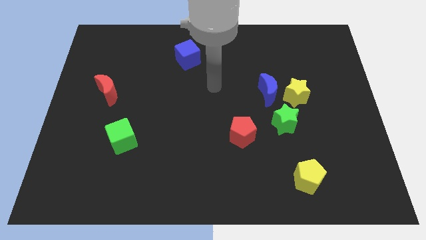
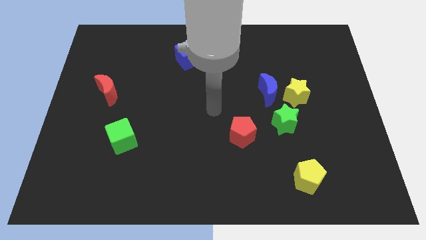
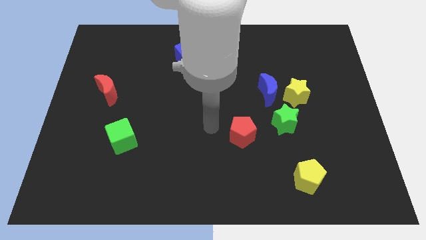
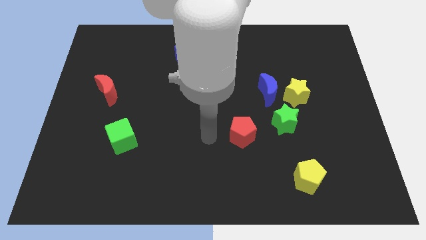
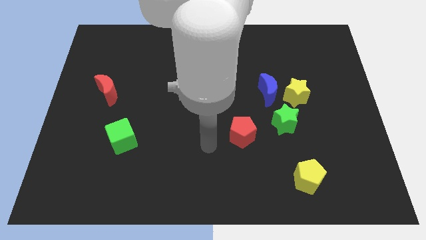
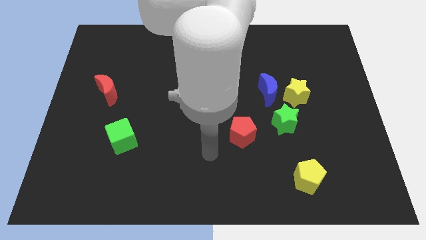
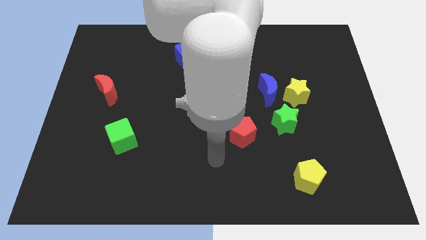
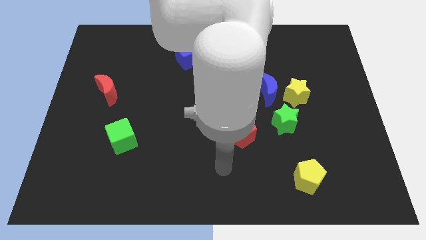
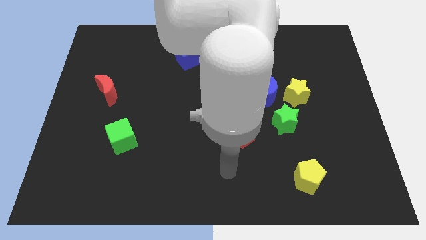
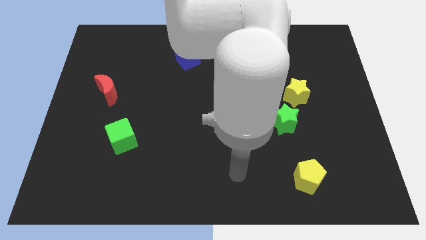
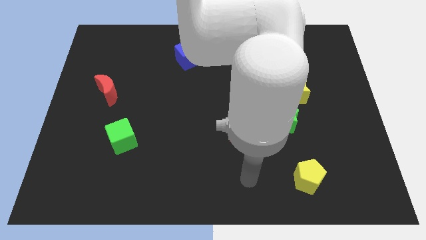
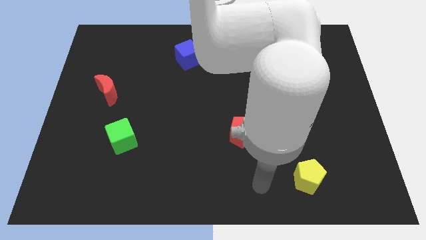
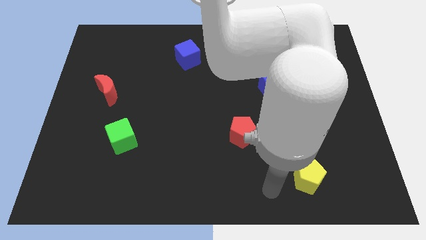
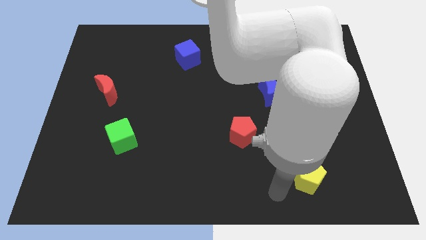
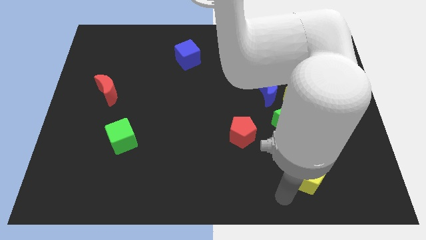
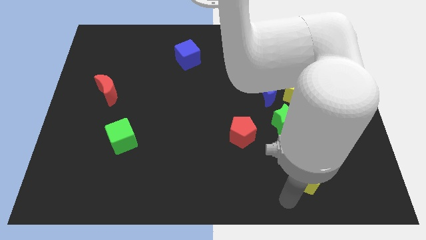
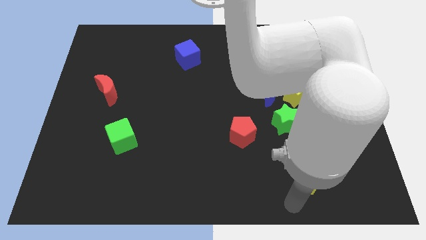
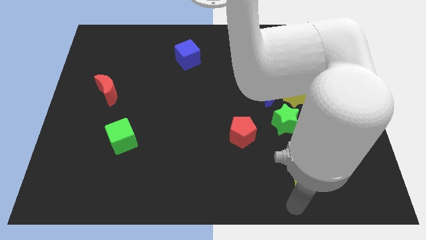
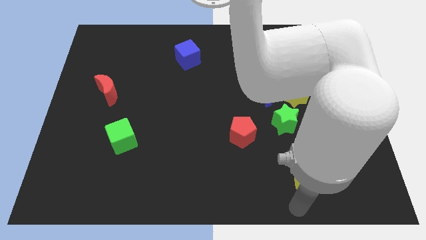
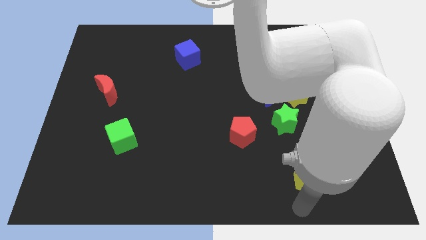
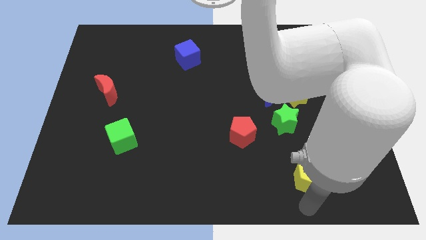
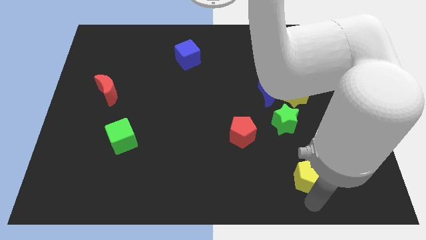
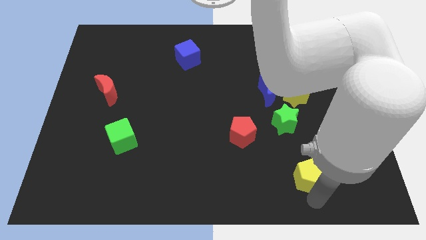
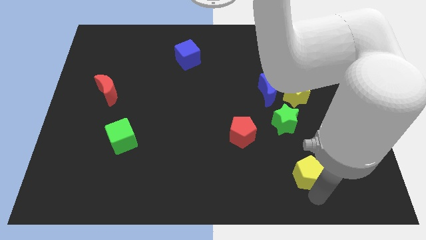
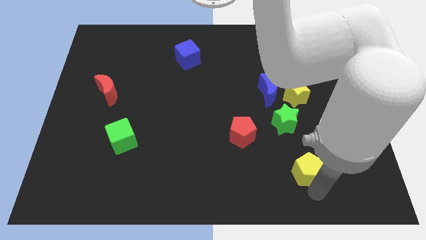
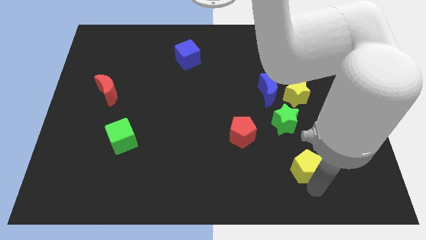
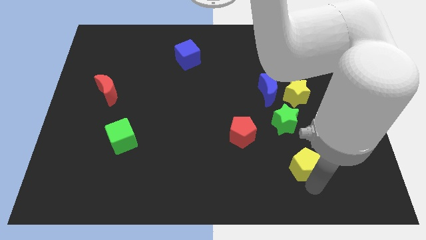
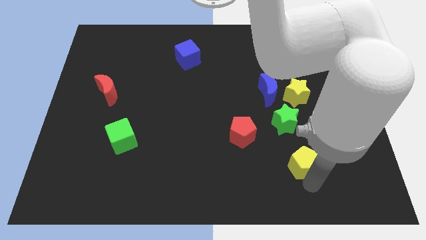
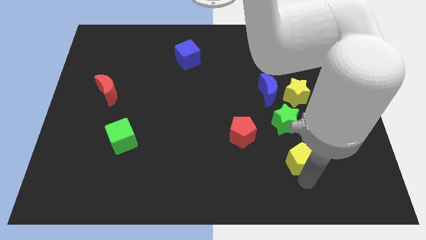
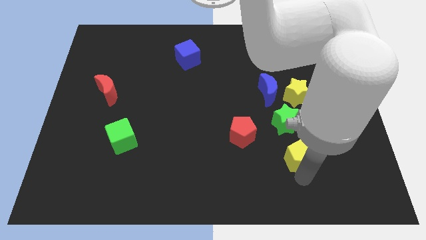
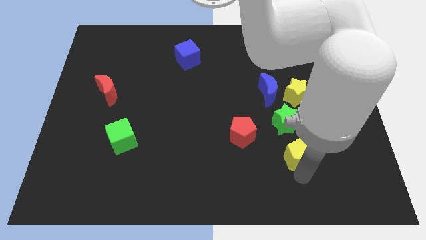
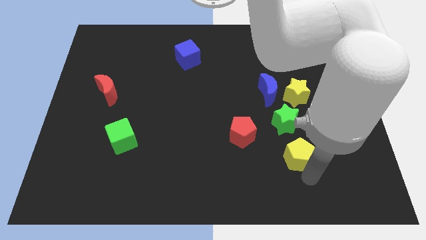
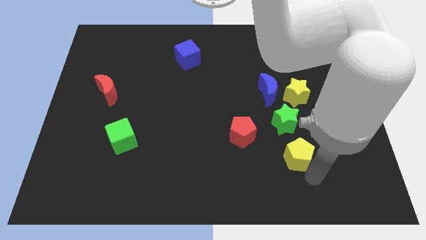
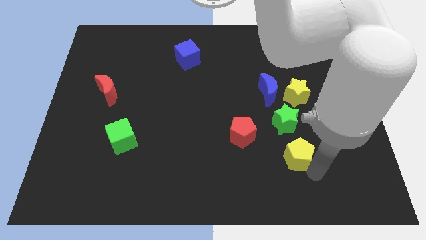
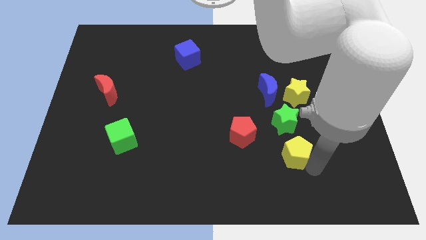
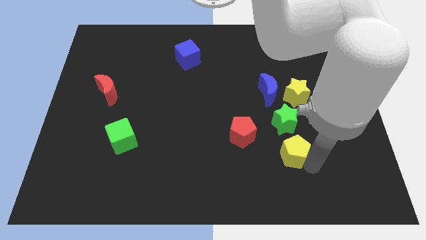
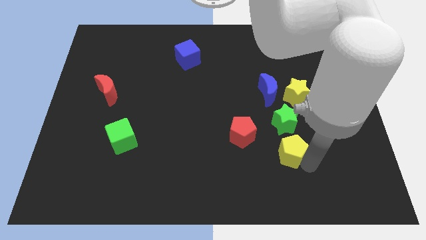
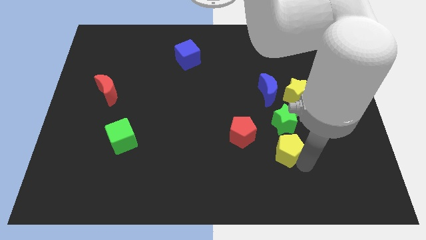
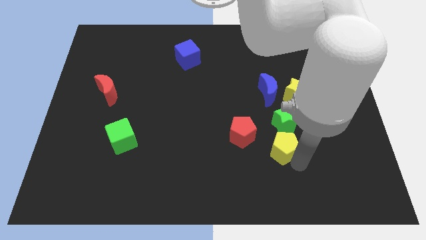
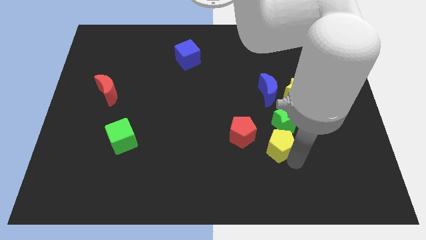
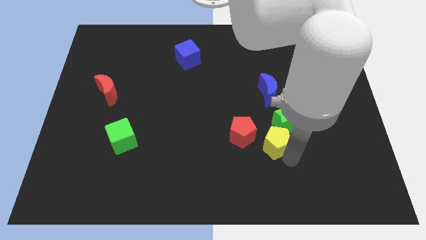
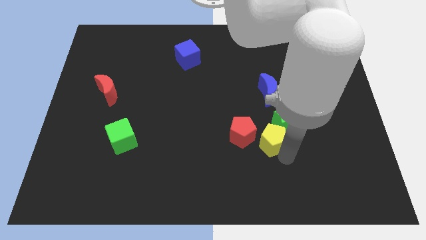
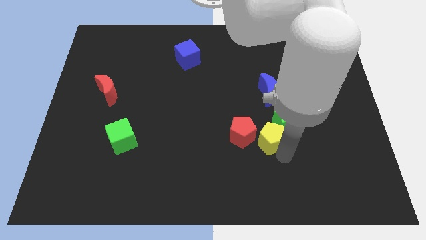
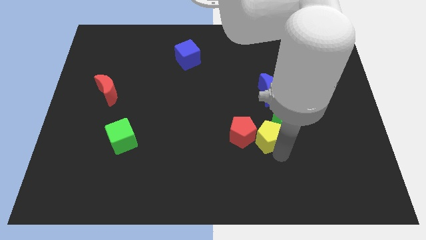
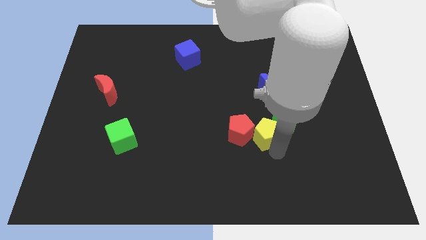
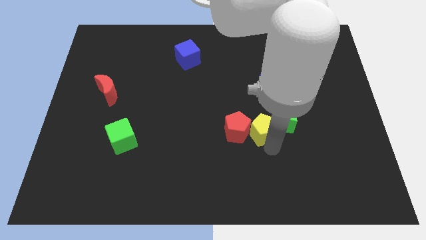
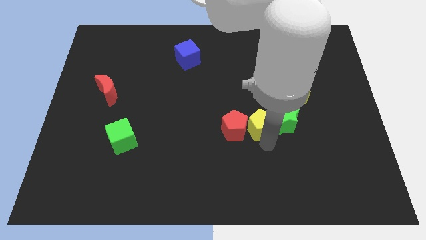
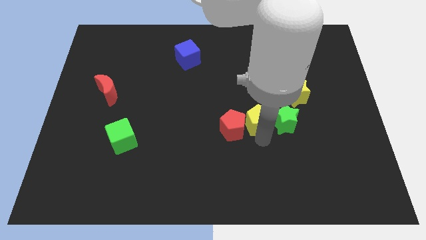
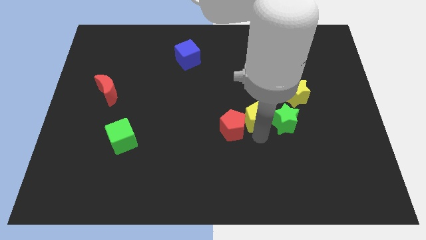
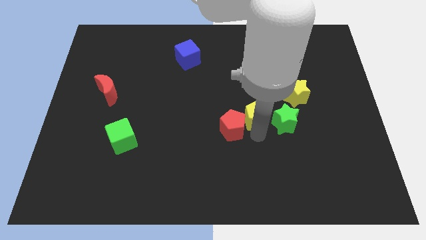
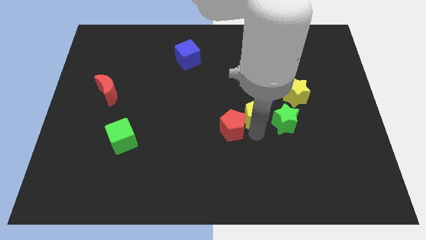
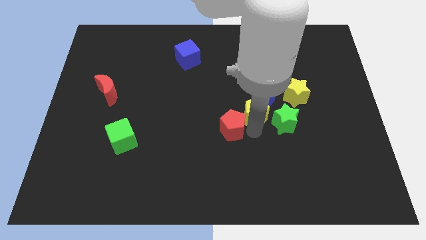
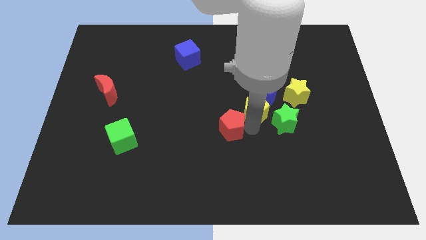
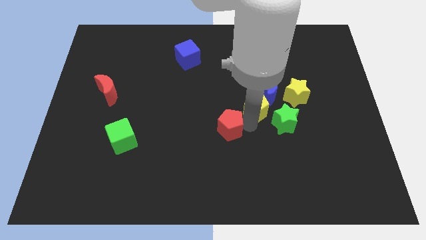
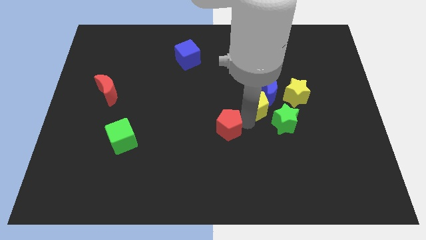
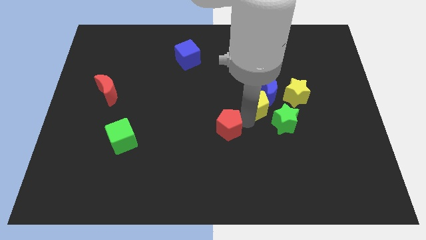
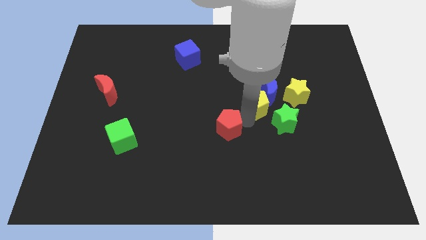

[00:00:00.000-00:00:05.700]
move the yellow pentagon towards the blue moon

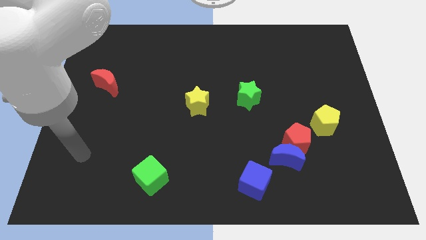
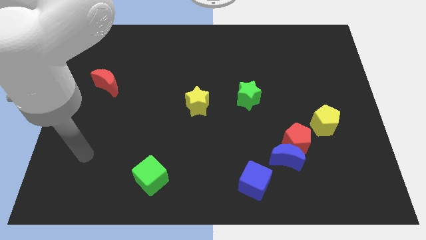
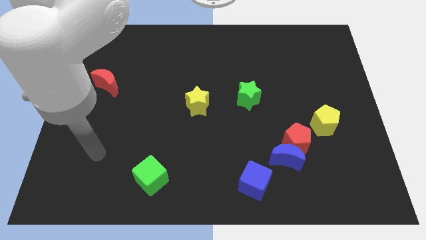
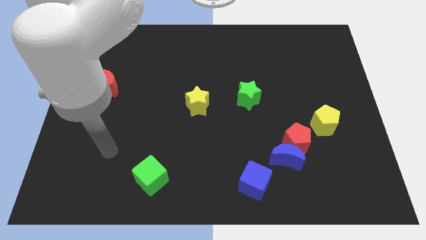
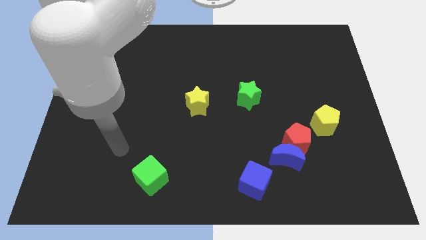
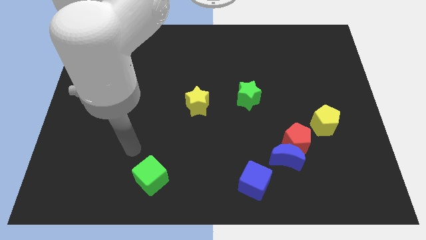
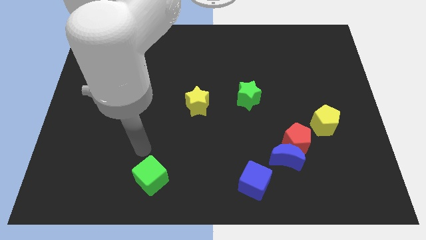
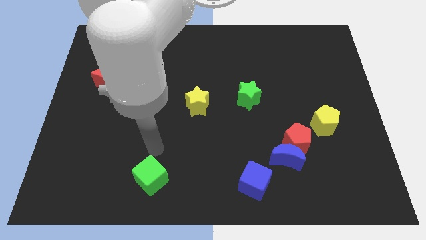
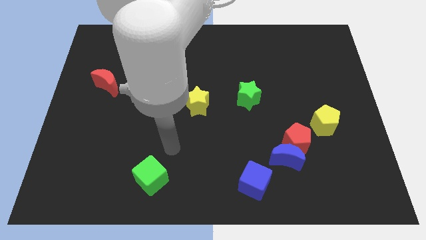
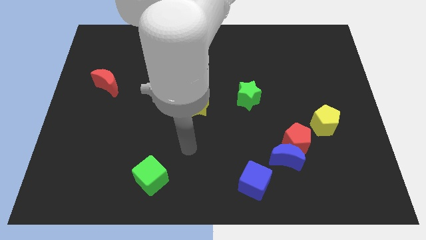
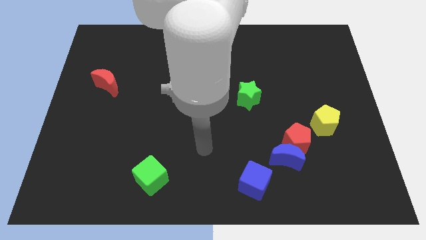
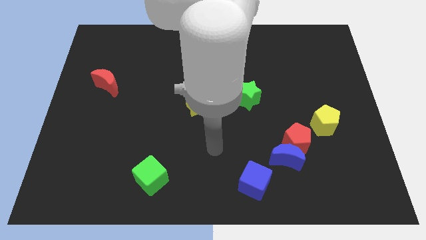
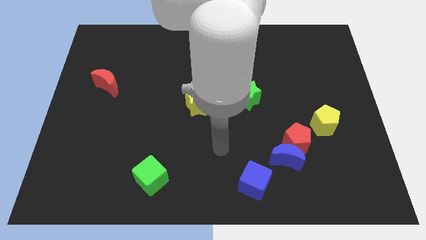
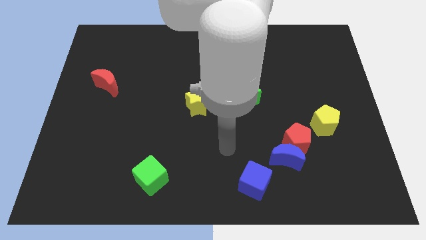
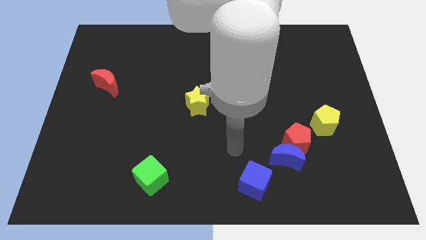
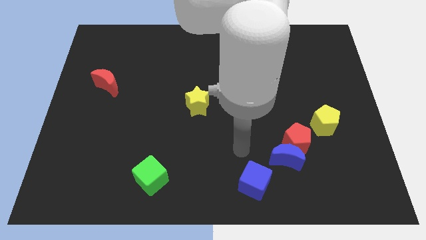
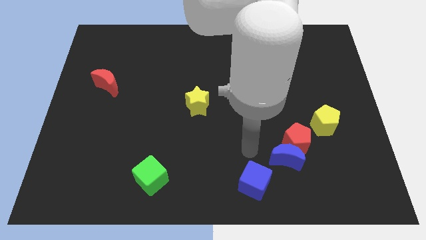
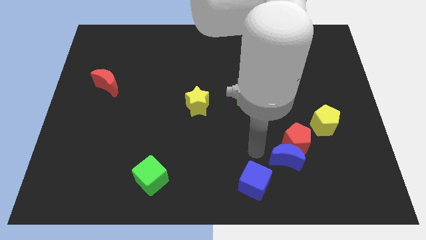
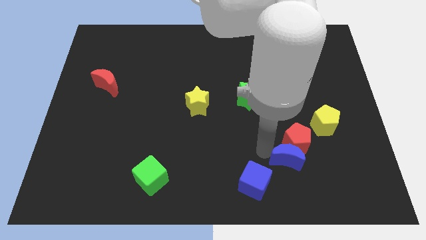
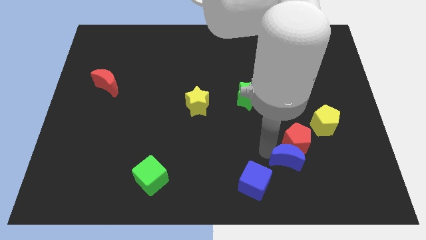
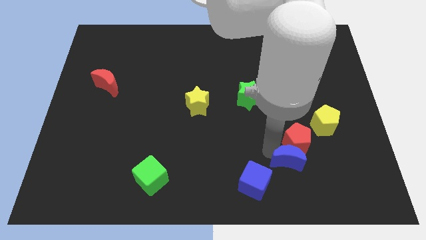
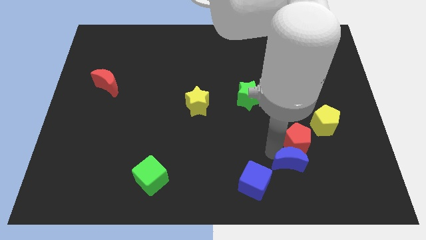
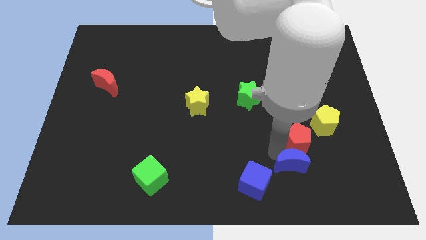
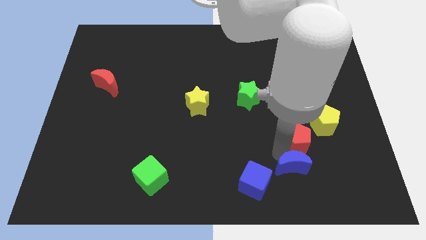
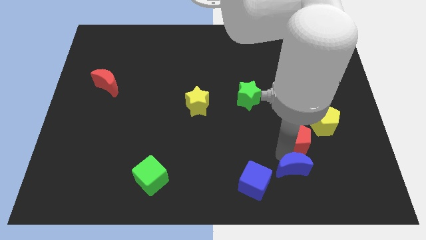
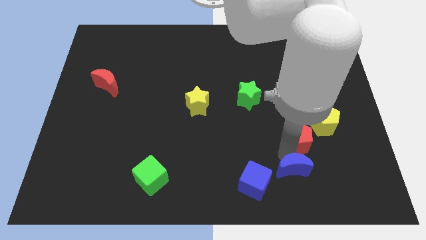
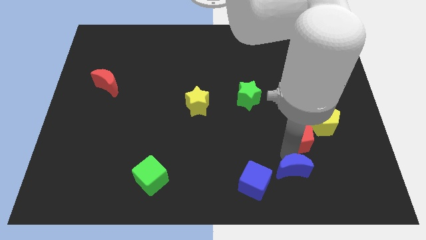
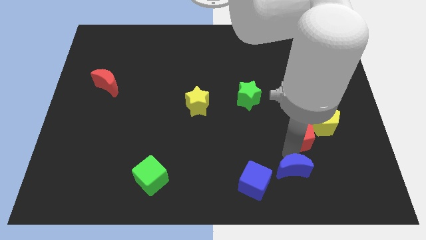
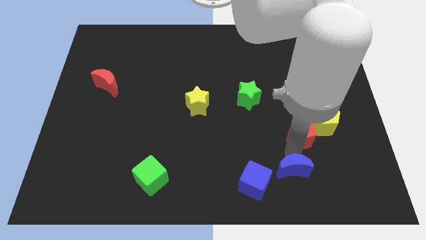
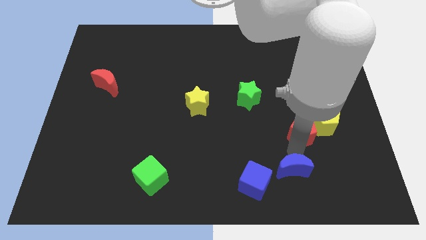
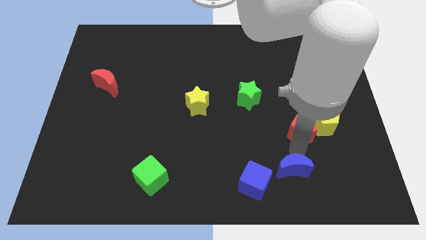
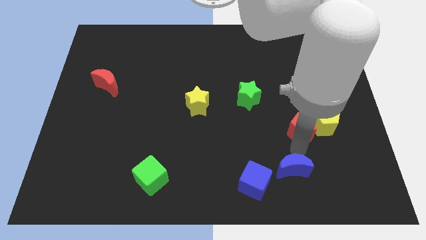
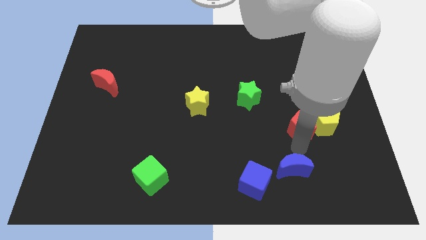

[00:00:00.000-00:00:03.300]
put the red pentagon next to the yellow pentagon
